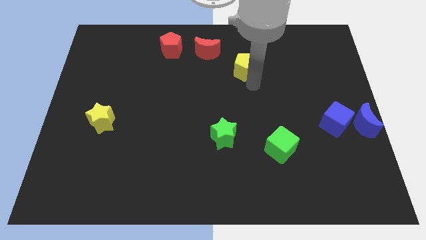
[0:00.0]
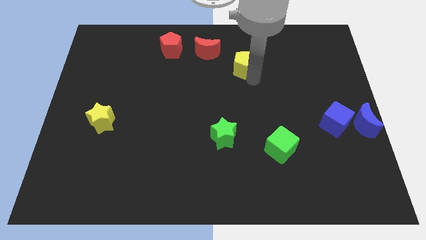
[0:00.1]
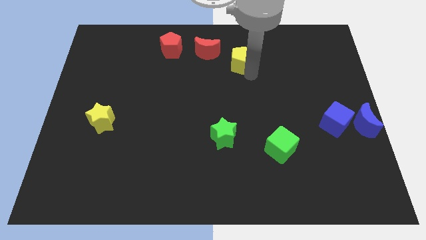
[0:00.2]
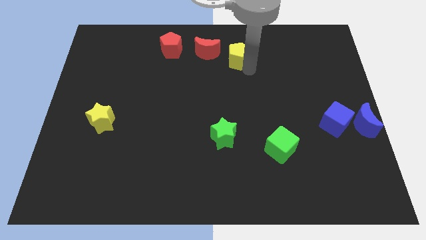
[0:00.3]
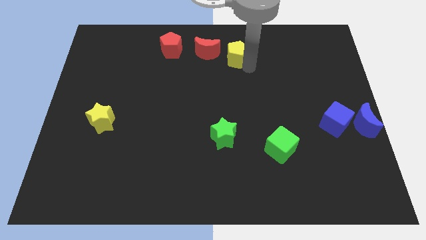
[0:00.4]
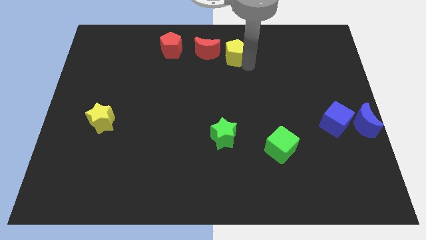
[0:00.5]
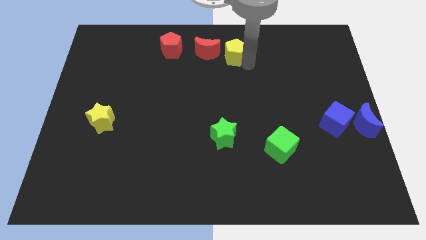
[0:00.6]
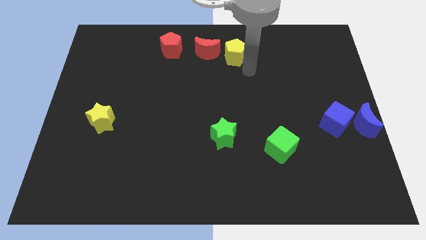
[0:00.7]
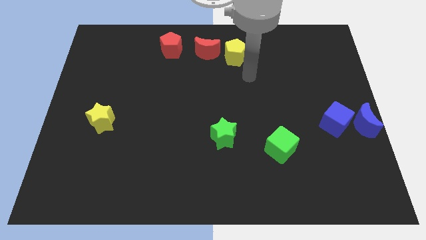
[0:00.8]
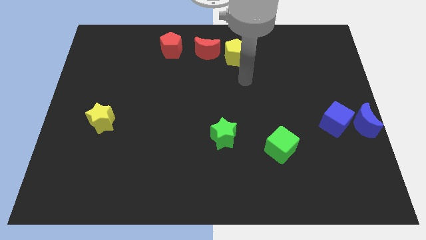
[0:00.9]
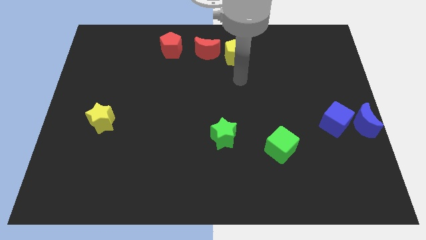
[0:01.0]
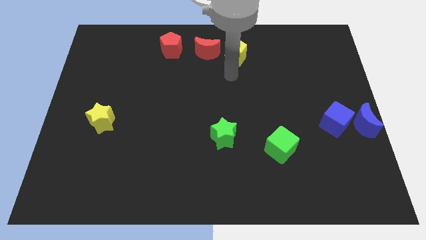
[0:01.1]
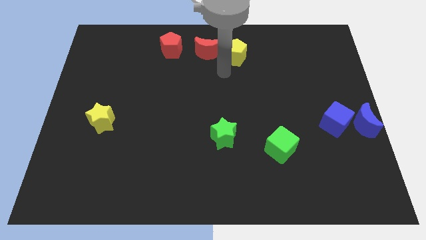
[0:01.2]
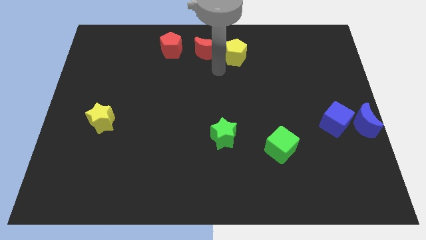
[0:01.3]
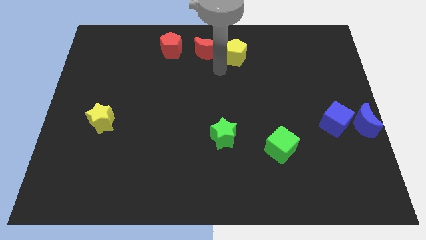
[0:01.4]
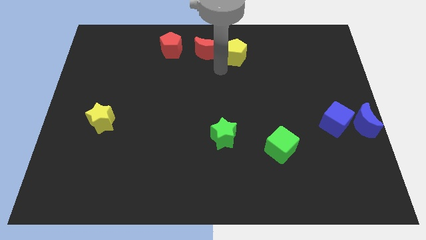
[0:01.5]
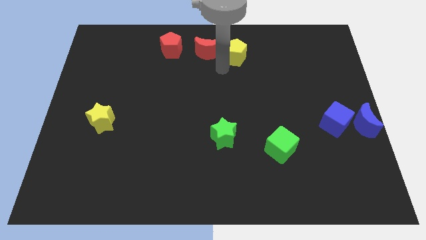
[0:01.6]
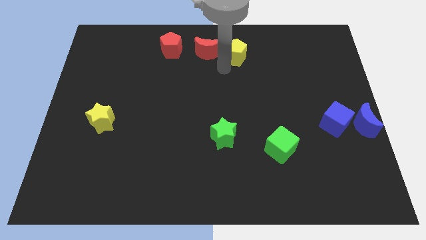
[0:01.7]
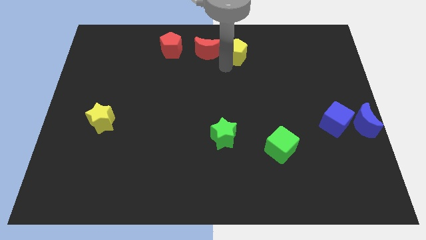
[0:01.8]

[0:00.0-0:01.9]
place the yellow pentagon to the right of the red moon

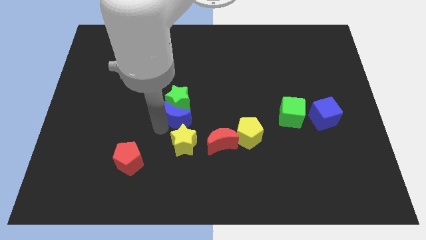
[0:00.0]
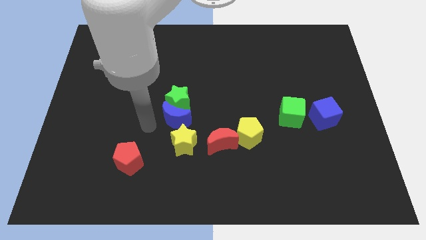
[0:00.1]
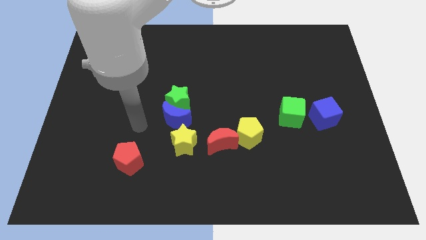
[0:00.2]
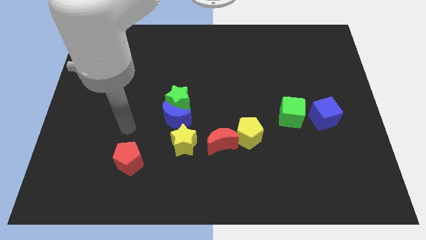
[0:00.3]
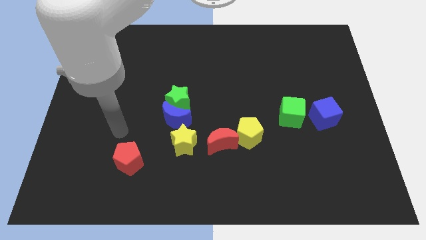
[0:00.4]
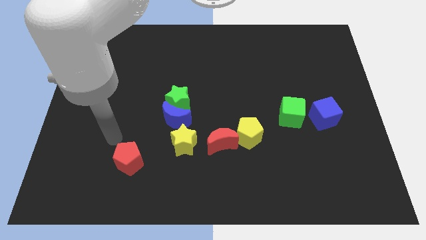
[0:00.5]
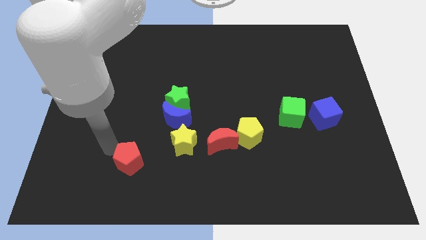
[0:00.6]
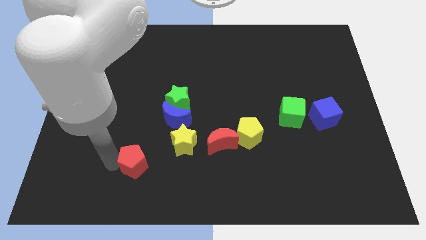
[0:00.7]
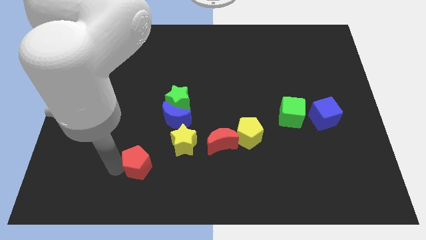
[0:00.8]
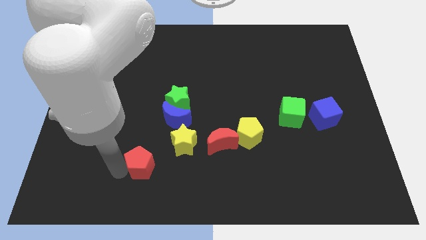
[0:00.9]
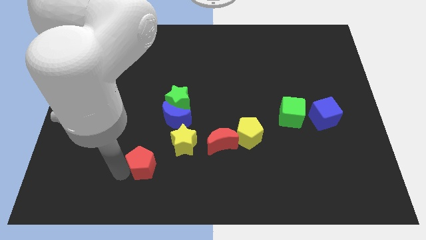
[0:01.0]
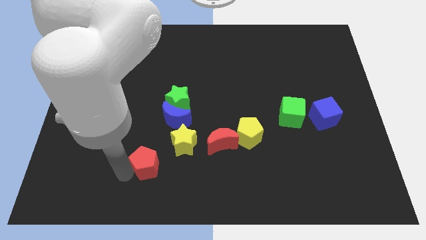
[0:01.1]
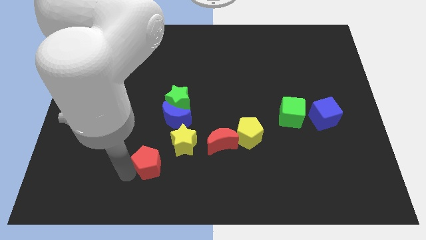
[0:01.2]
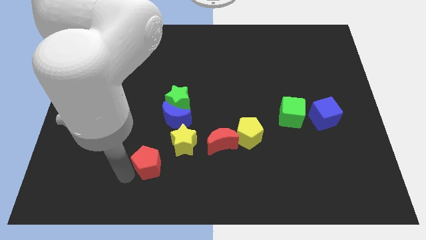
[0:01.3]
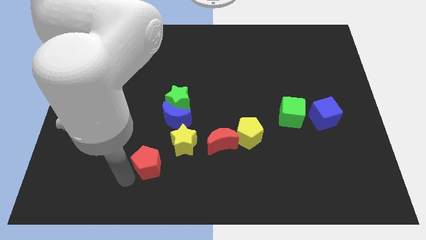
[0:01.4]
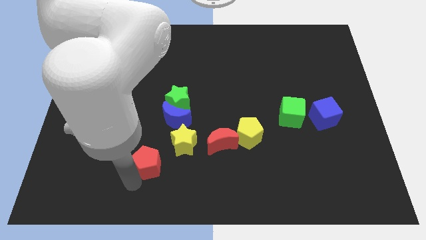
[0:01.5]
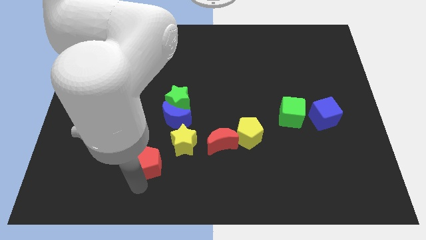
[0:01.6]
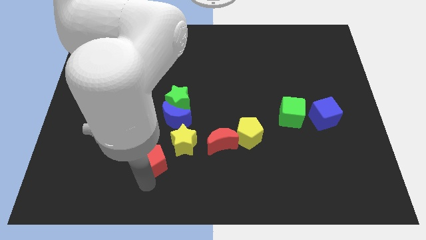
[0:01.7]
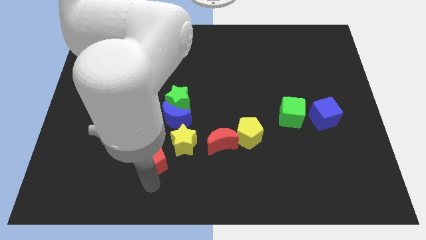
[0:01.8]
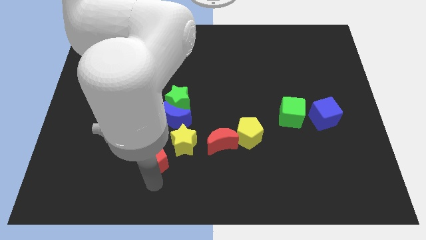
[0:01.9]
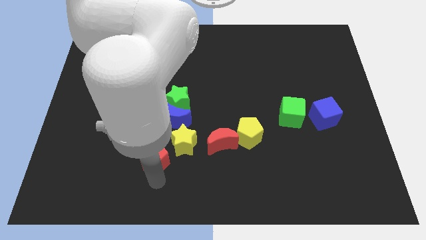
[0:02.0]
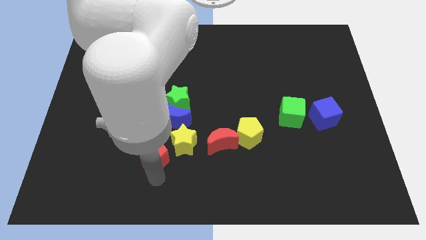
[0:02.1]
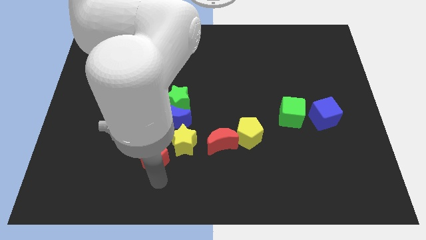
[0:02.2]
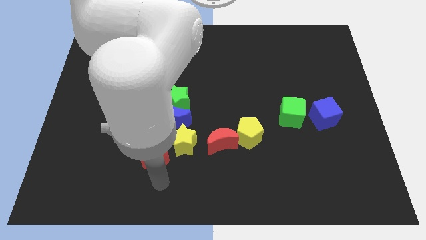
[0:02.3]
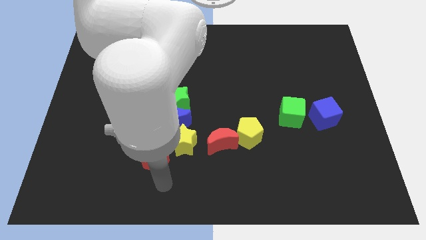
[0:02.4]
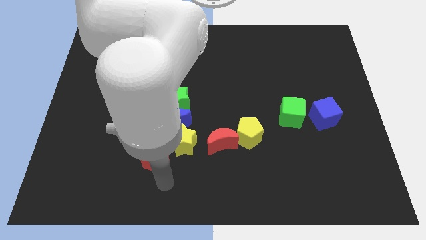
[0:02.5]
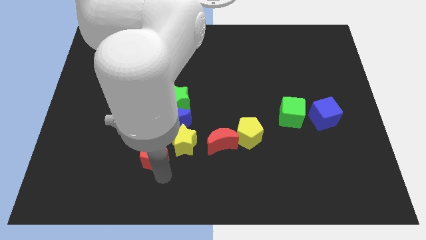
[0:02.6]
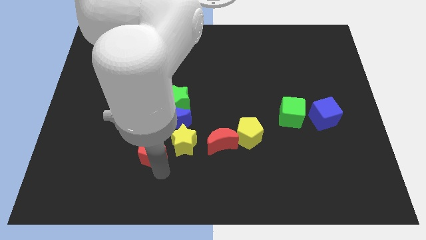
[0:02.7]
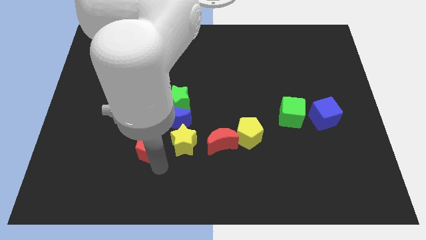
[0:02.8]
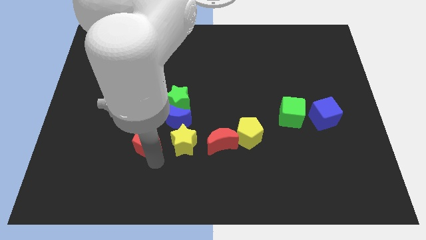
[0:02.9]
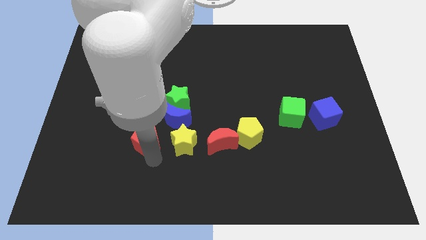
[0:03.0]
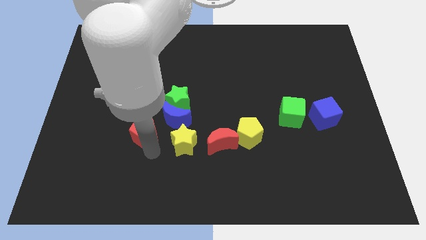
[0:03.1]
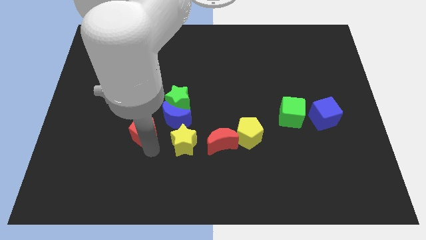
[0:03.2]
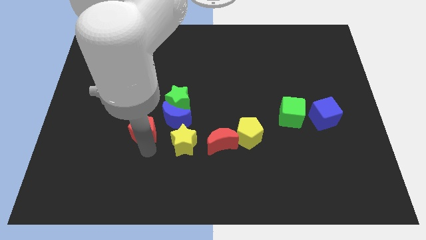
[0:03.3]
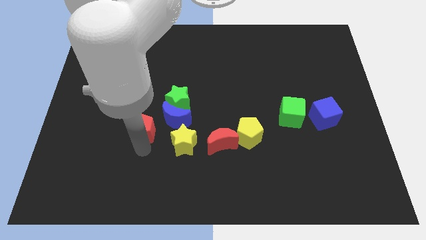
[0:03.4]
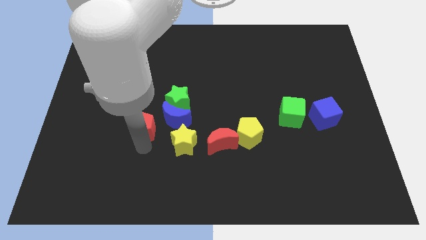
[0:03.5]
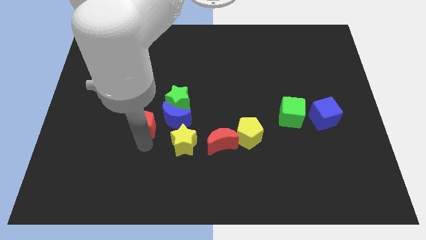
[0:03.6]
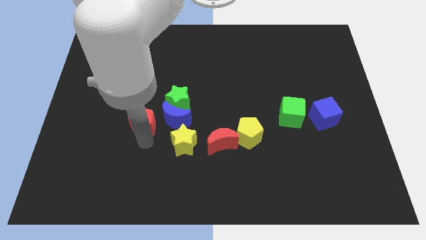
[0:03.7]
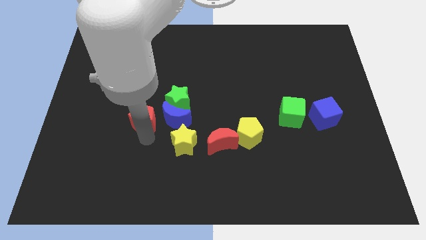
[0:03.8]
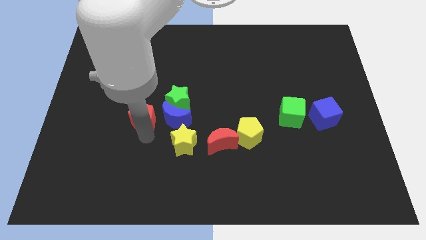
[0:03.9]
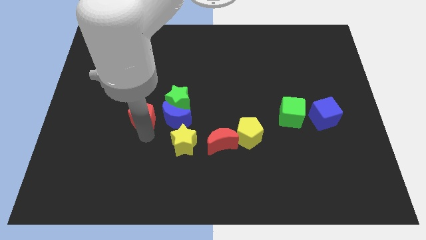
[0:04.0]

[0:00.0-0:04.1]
move the red pentagon to the left of the blue crescent

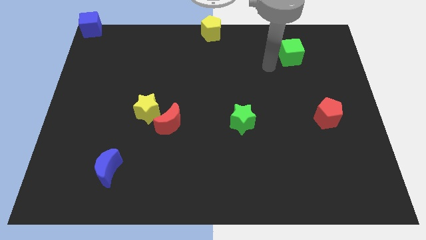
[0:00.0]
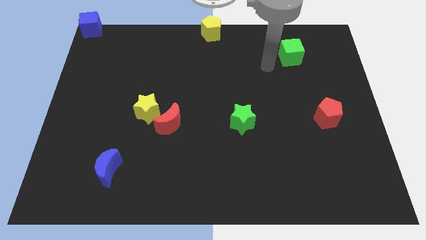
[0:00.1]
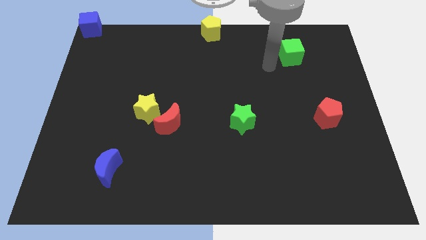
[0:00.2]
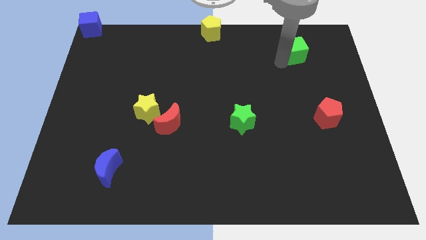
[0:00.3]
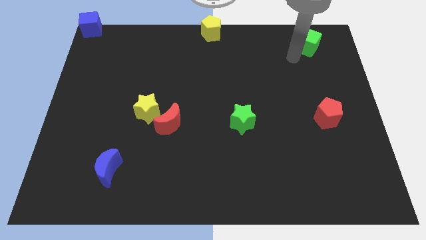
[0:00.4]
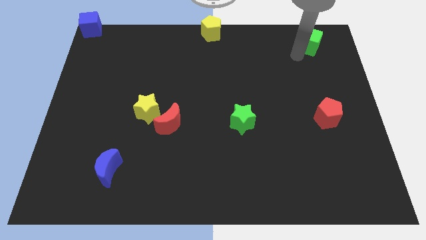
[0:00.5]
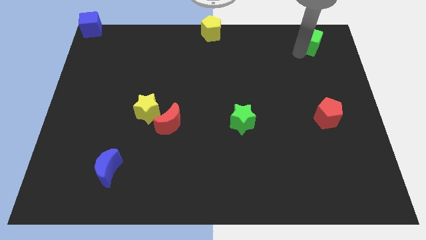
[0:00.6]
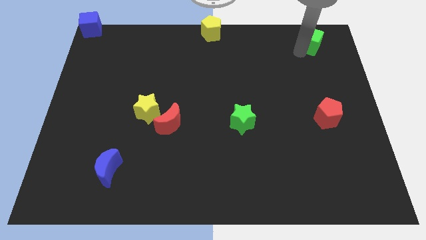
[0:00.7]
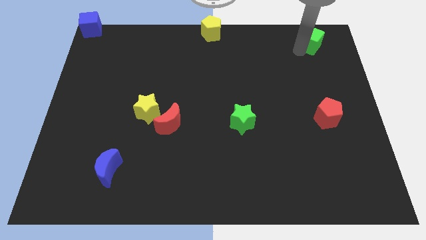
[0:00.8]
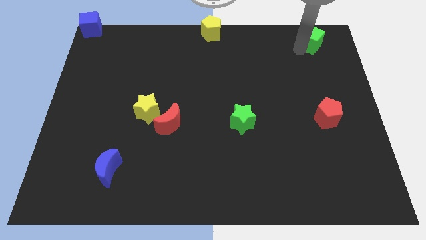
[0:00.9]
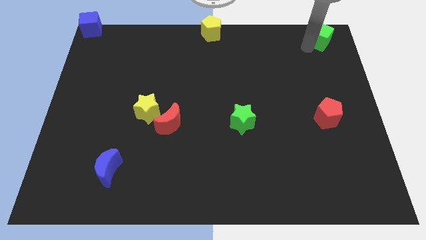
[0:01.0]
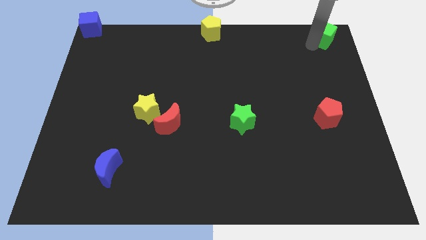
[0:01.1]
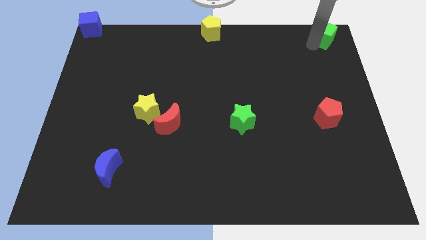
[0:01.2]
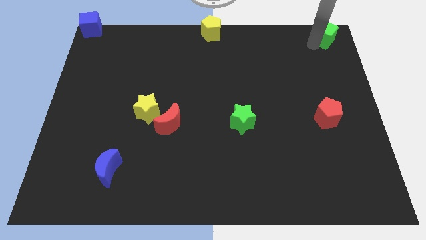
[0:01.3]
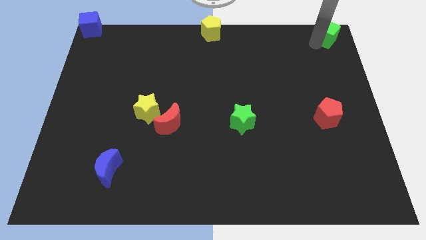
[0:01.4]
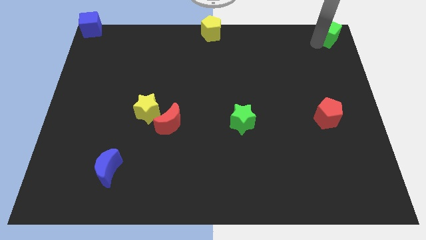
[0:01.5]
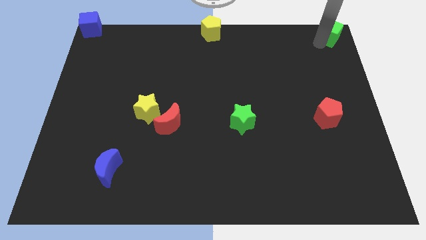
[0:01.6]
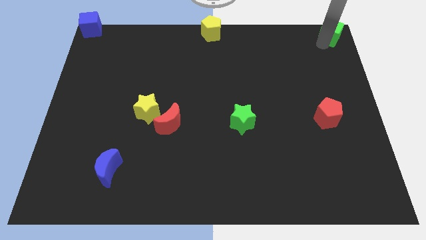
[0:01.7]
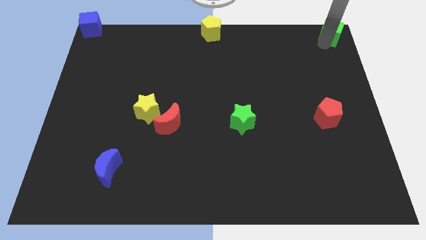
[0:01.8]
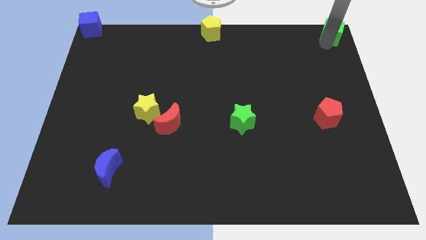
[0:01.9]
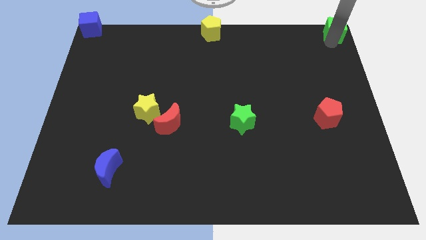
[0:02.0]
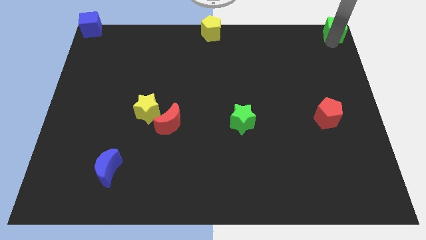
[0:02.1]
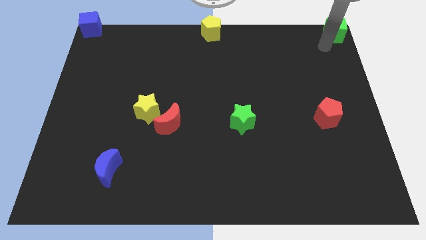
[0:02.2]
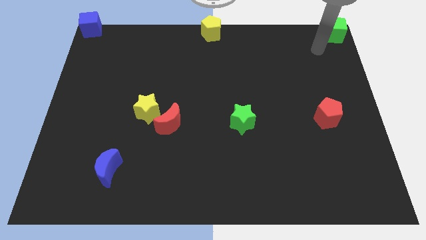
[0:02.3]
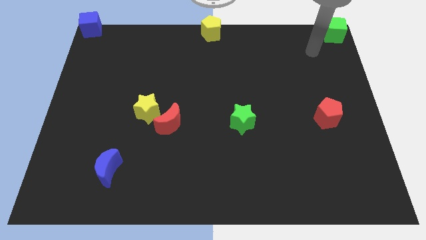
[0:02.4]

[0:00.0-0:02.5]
push the green cube to the top right corner of the board

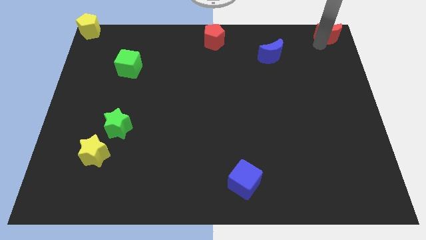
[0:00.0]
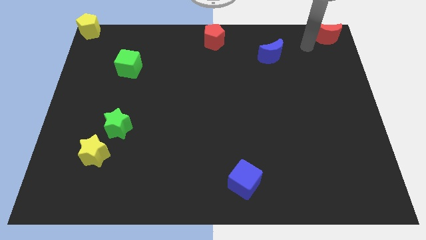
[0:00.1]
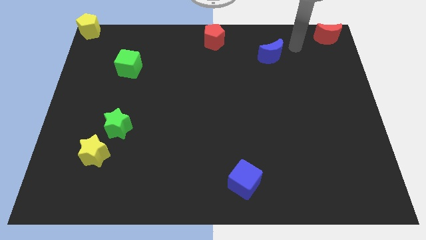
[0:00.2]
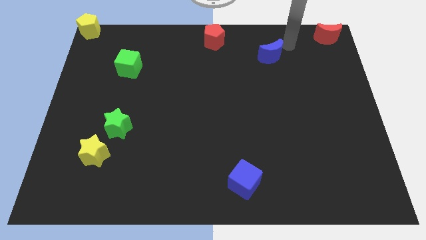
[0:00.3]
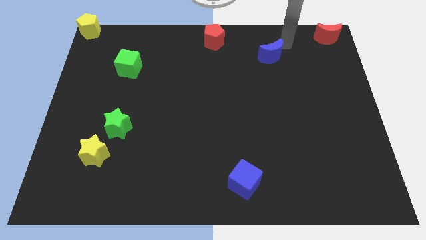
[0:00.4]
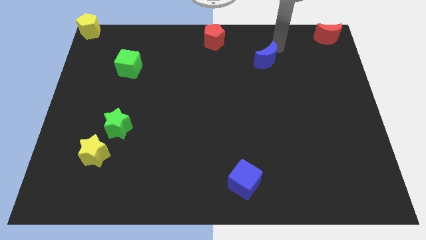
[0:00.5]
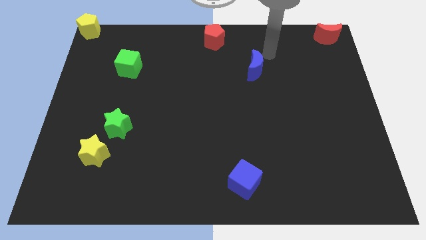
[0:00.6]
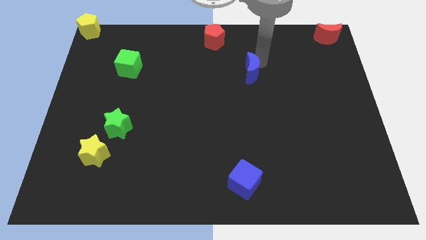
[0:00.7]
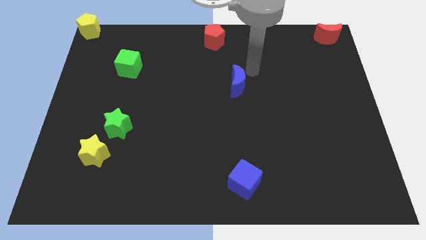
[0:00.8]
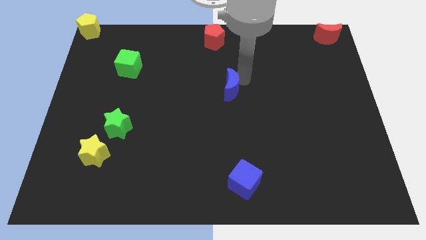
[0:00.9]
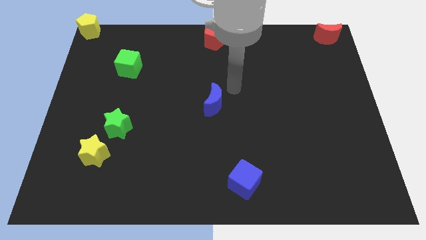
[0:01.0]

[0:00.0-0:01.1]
push the blue crescent diagonal to the green cube
